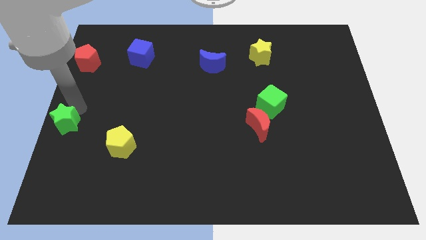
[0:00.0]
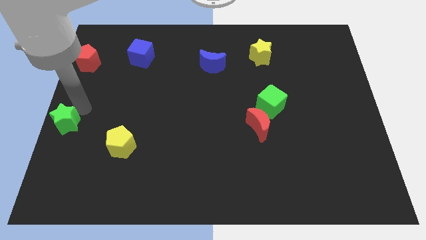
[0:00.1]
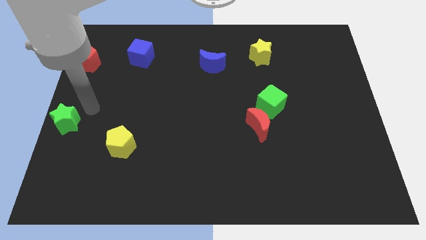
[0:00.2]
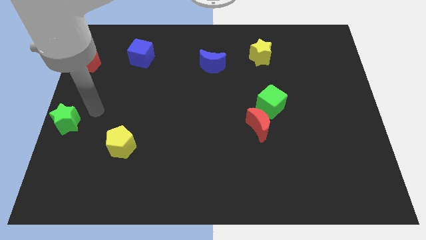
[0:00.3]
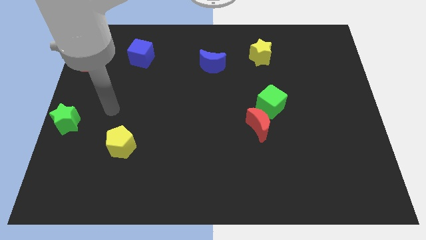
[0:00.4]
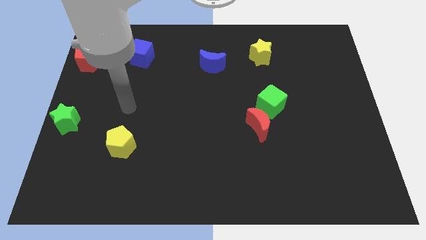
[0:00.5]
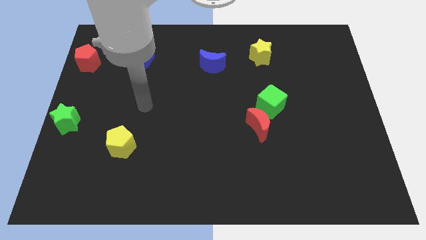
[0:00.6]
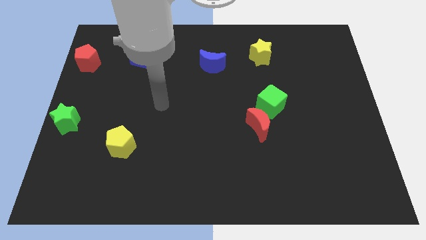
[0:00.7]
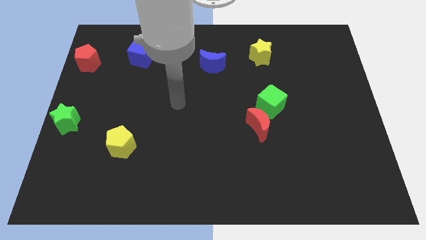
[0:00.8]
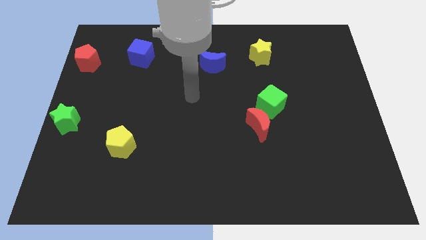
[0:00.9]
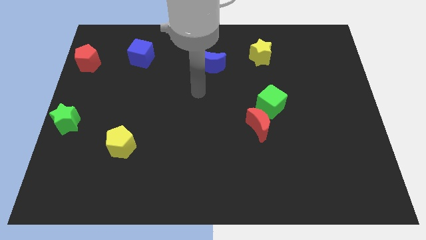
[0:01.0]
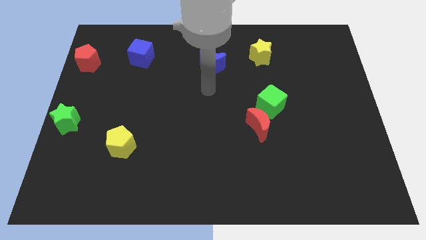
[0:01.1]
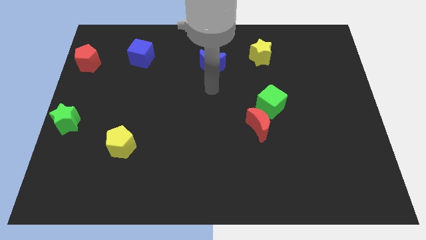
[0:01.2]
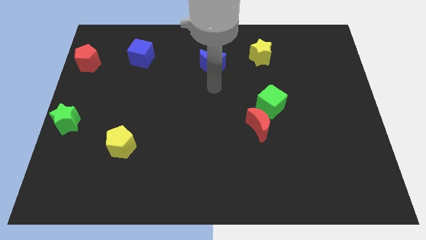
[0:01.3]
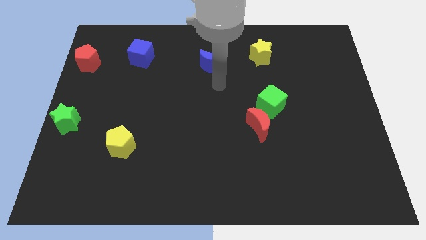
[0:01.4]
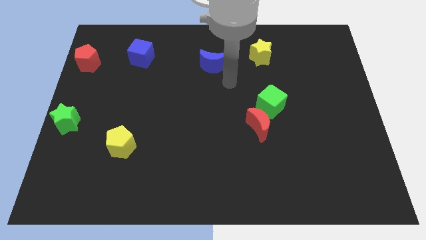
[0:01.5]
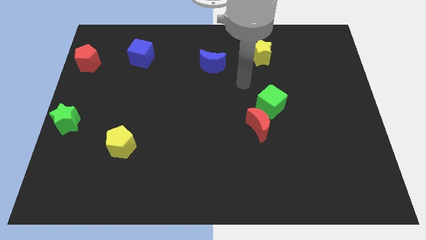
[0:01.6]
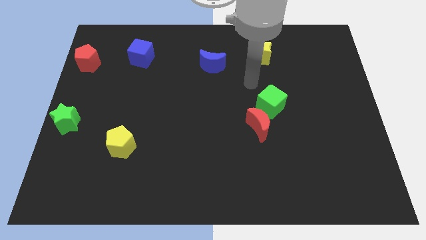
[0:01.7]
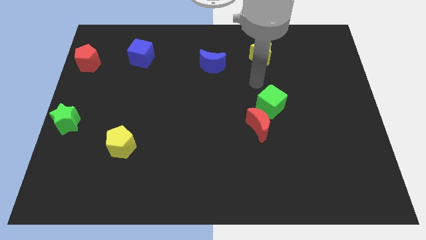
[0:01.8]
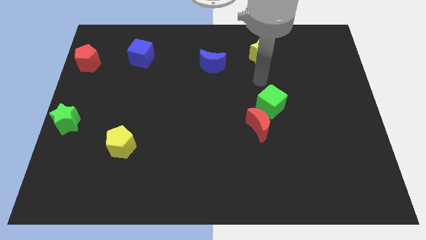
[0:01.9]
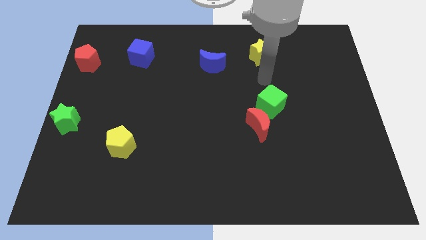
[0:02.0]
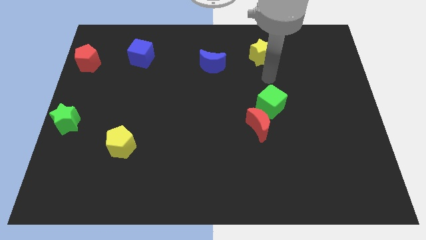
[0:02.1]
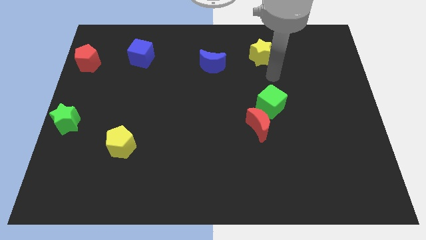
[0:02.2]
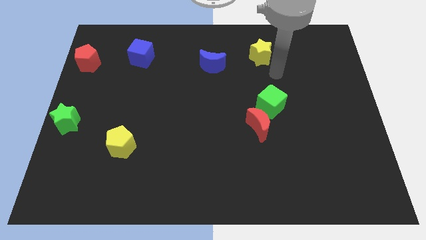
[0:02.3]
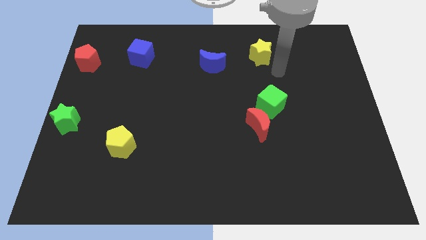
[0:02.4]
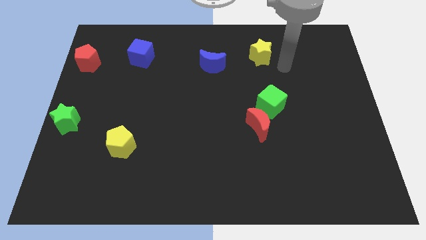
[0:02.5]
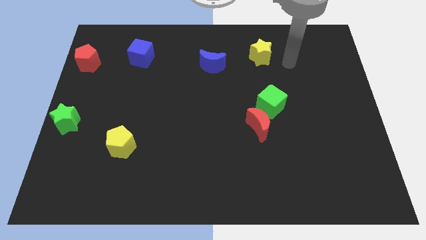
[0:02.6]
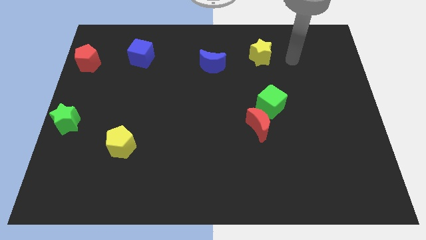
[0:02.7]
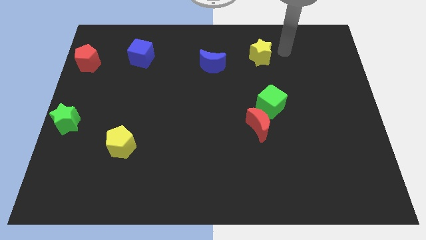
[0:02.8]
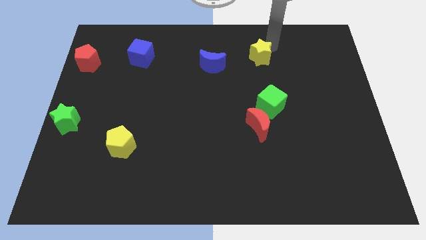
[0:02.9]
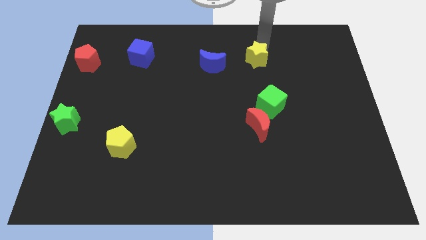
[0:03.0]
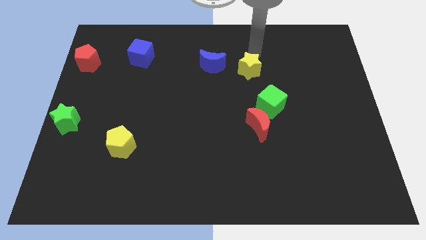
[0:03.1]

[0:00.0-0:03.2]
touch the top side of the yellow star

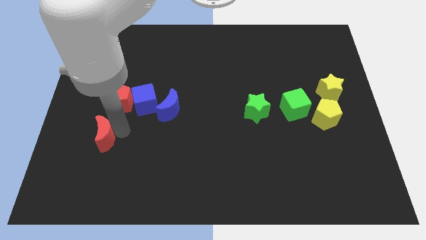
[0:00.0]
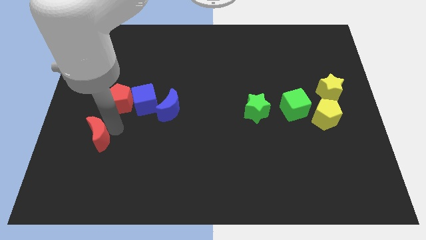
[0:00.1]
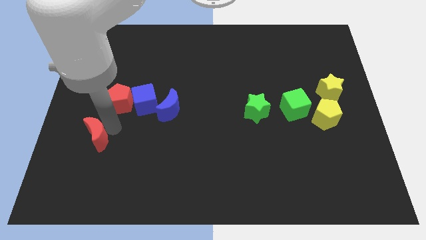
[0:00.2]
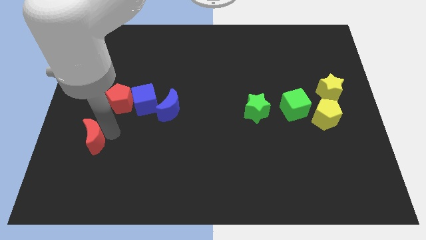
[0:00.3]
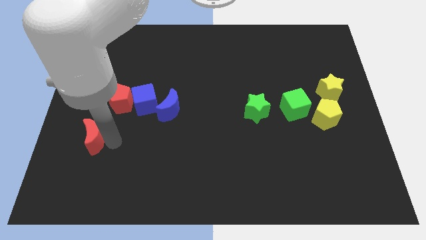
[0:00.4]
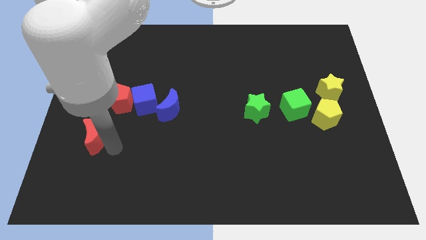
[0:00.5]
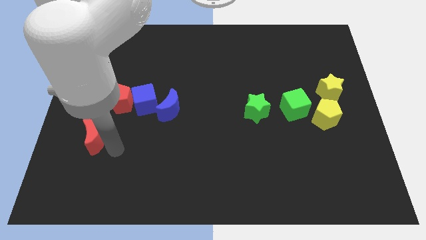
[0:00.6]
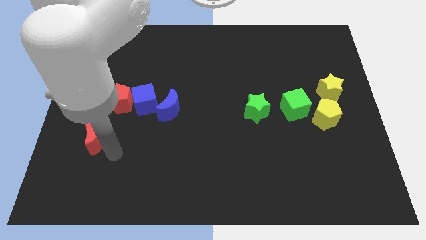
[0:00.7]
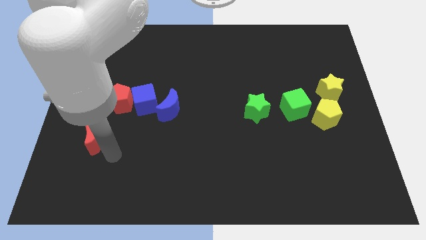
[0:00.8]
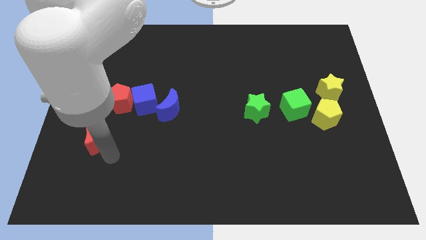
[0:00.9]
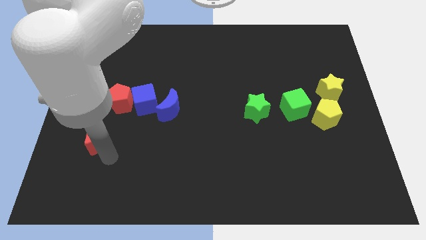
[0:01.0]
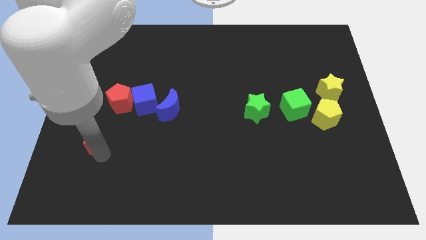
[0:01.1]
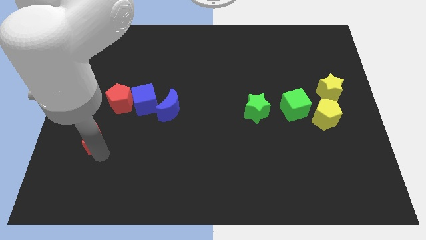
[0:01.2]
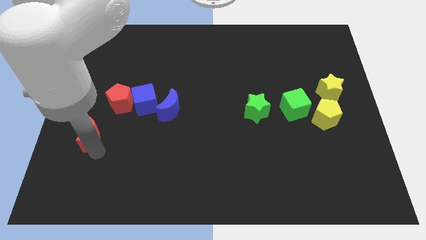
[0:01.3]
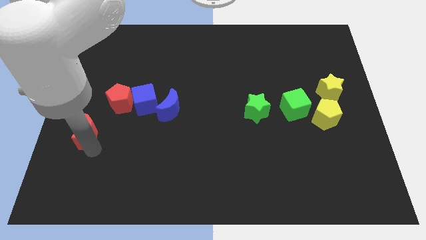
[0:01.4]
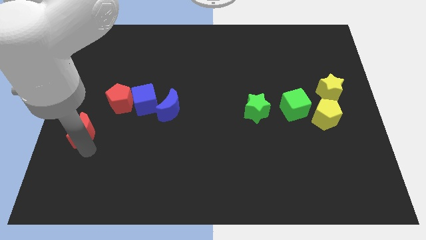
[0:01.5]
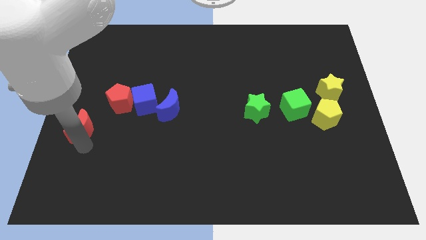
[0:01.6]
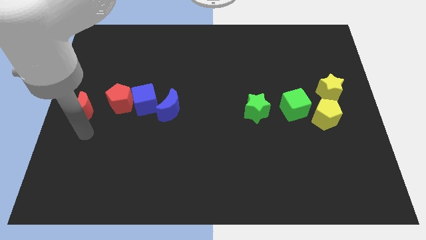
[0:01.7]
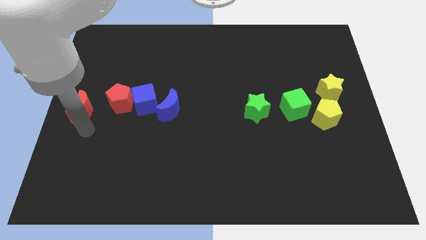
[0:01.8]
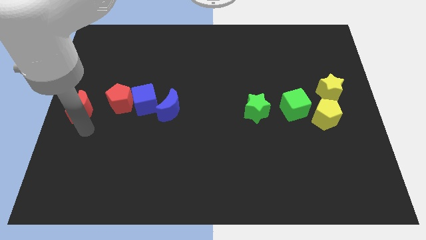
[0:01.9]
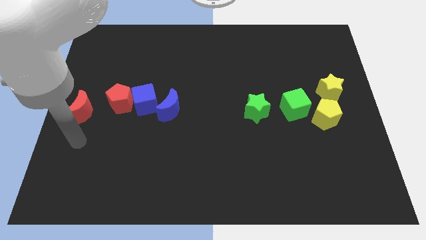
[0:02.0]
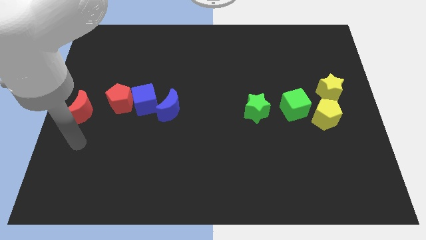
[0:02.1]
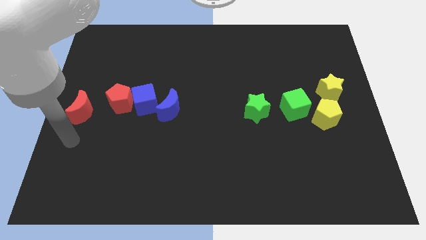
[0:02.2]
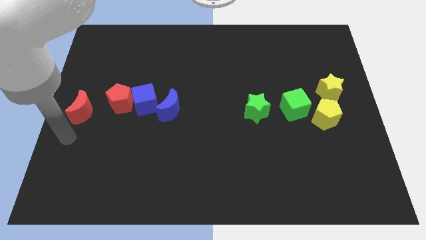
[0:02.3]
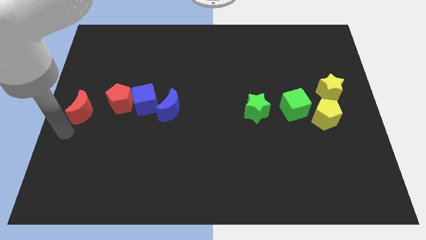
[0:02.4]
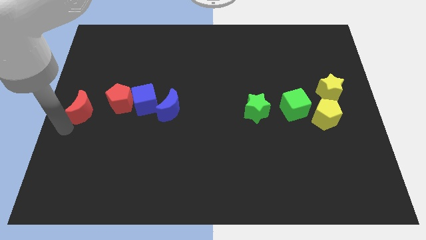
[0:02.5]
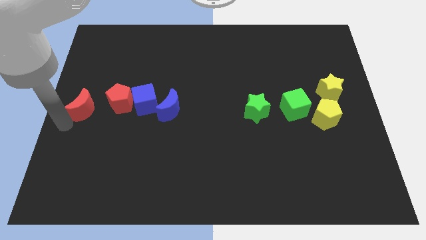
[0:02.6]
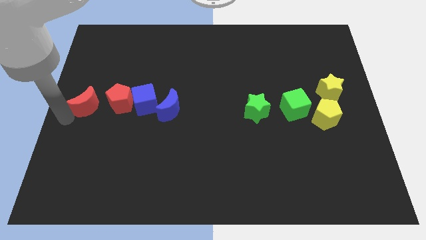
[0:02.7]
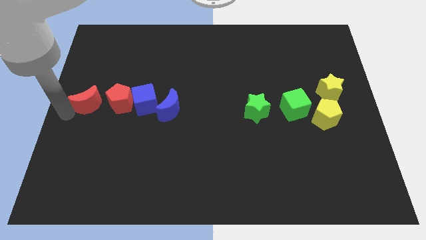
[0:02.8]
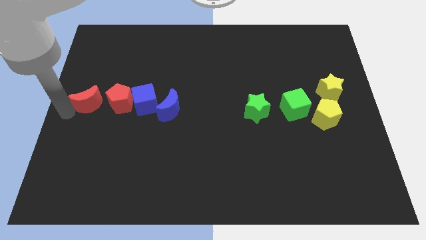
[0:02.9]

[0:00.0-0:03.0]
move red moon left beside the red pentagon

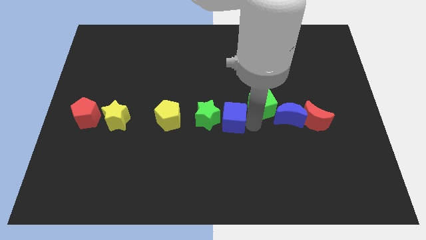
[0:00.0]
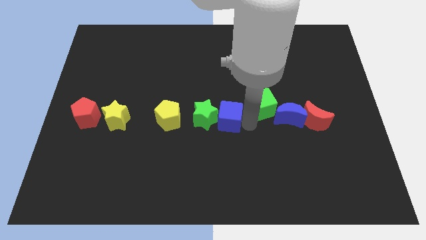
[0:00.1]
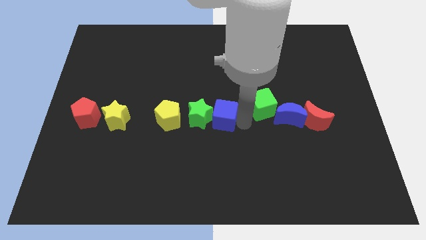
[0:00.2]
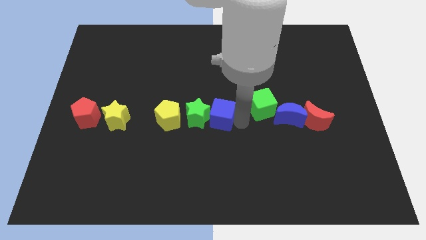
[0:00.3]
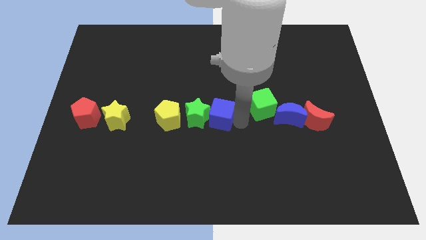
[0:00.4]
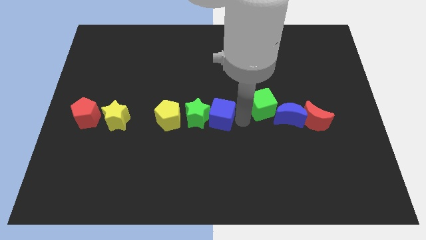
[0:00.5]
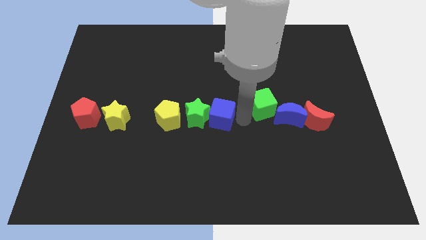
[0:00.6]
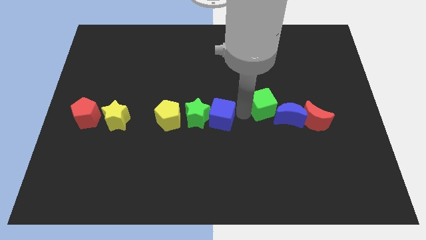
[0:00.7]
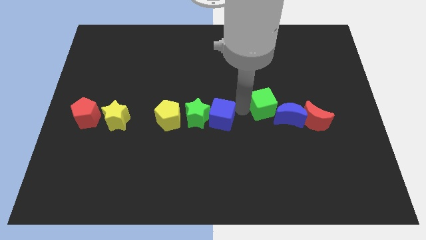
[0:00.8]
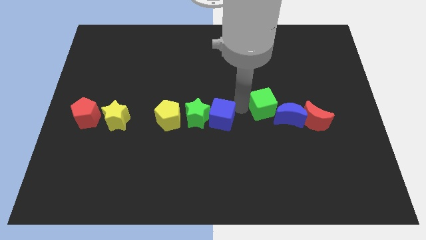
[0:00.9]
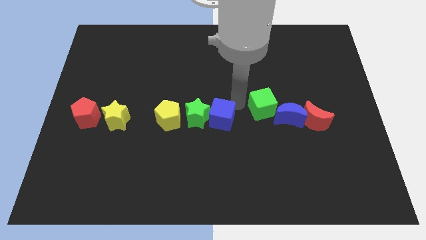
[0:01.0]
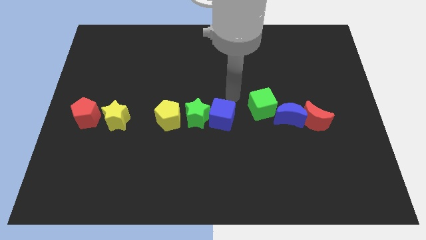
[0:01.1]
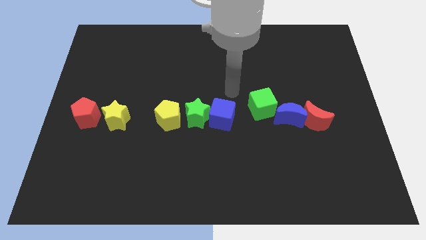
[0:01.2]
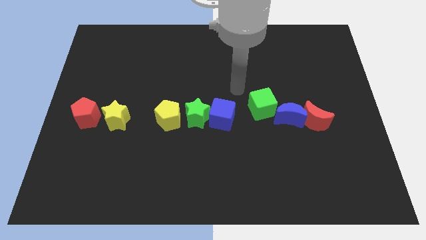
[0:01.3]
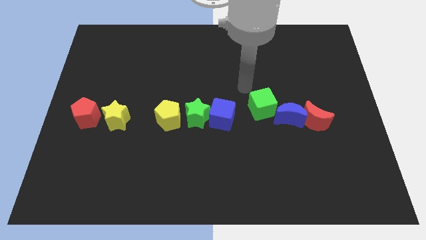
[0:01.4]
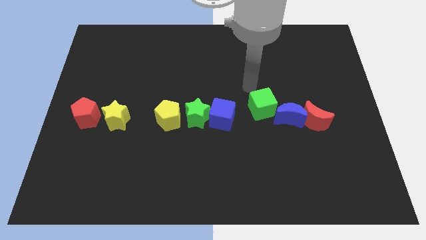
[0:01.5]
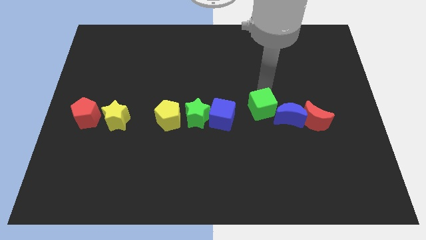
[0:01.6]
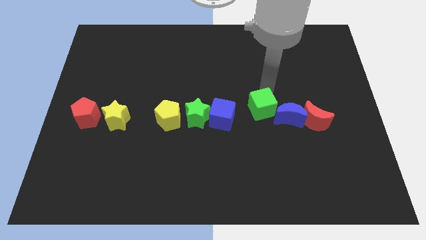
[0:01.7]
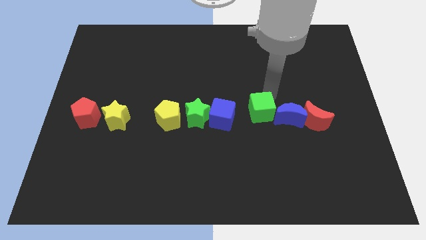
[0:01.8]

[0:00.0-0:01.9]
slide the blue cube into the green star

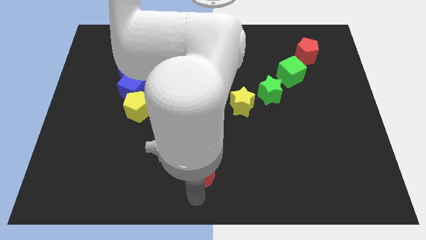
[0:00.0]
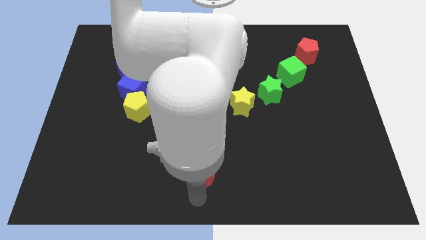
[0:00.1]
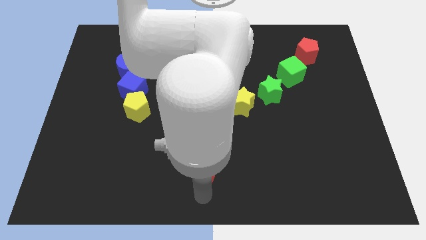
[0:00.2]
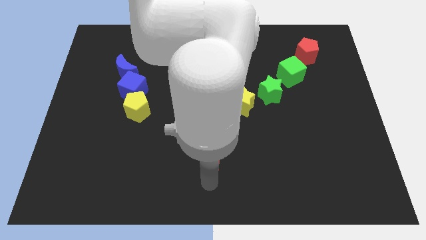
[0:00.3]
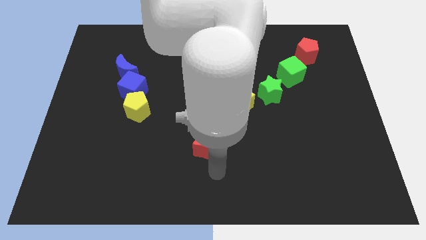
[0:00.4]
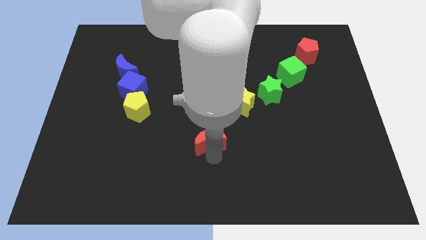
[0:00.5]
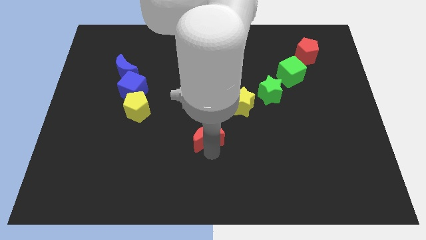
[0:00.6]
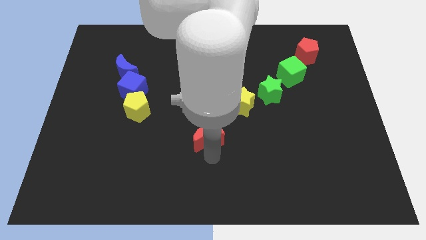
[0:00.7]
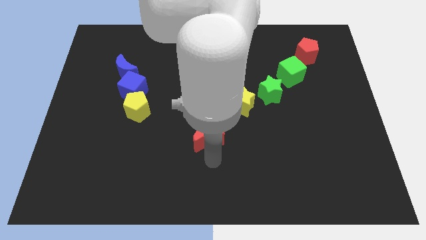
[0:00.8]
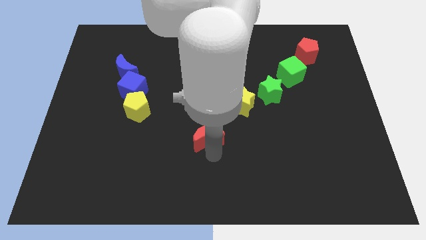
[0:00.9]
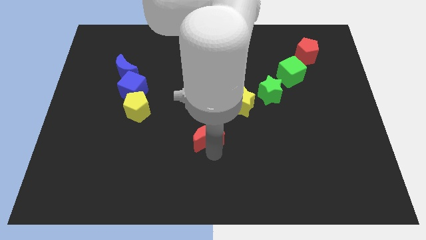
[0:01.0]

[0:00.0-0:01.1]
push the red moon upward
